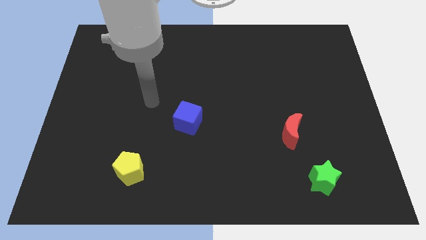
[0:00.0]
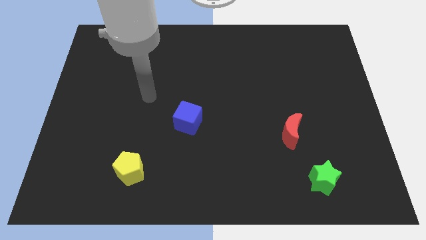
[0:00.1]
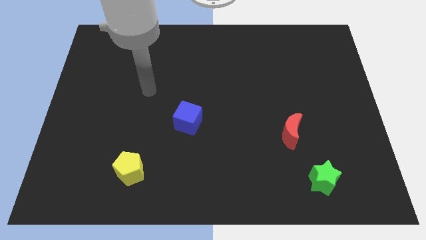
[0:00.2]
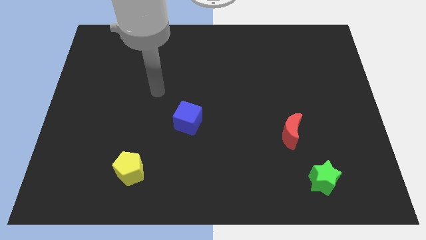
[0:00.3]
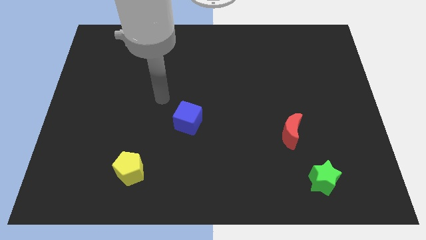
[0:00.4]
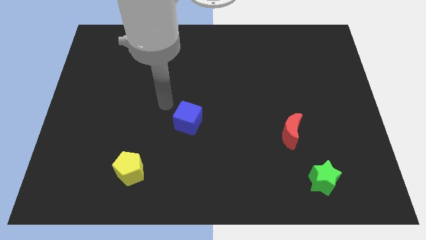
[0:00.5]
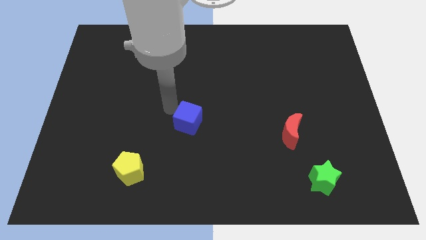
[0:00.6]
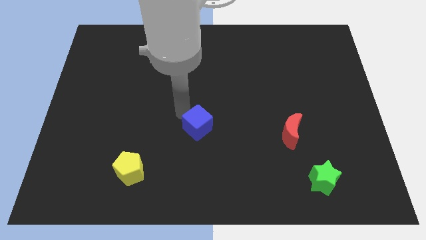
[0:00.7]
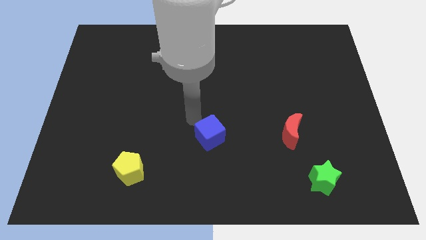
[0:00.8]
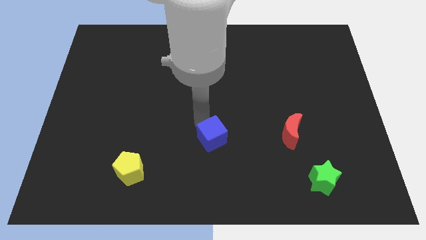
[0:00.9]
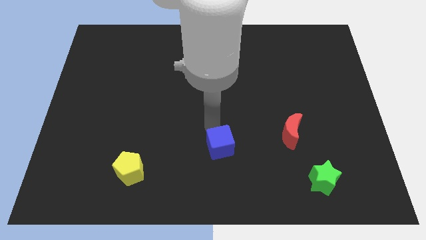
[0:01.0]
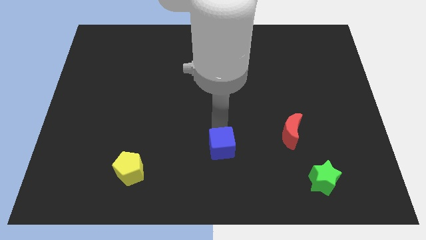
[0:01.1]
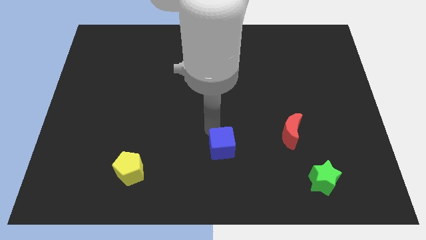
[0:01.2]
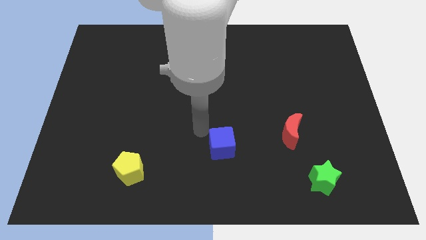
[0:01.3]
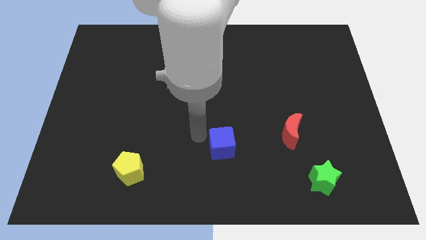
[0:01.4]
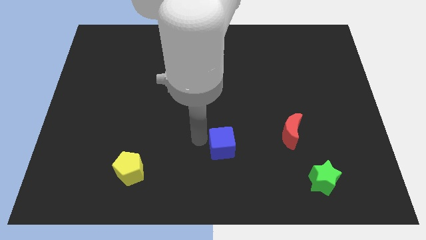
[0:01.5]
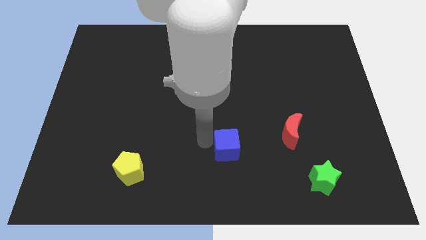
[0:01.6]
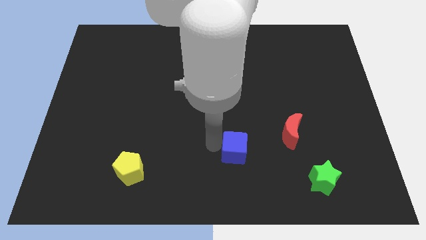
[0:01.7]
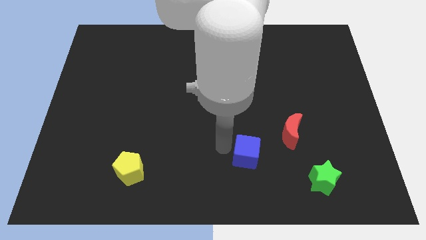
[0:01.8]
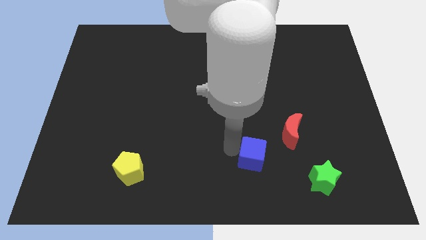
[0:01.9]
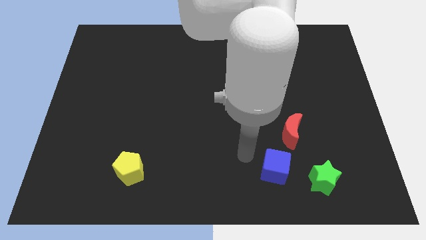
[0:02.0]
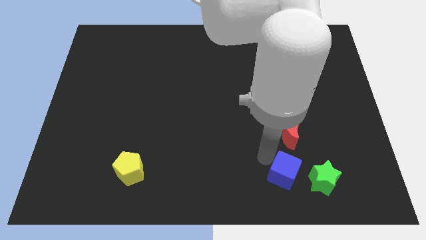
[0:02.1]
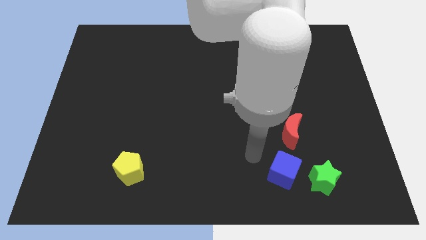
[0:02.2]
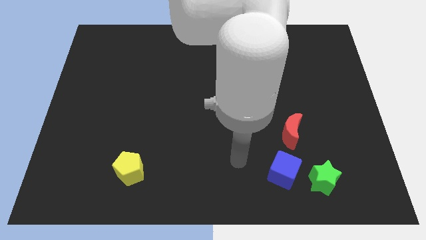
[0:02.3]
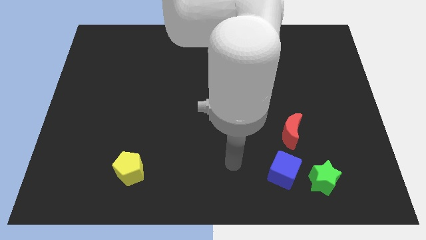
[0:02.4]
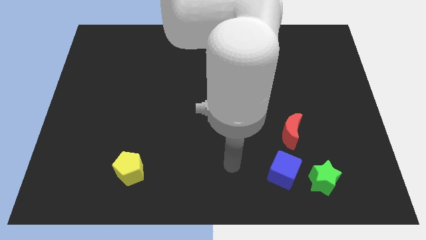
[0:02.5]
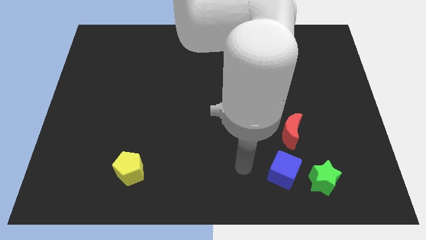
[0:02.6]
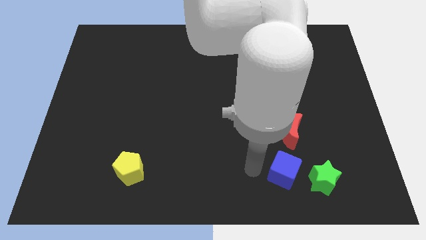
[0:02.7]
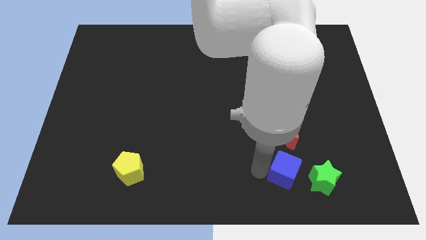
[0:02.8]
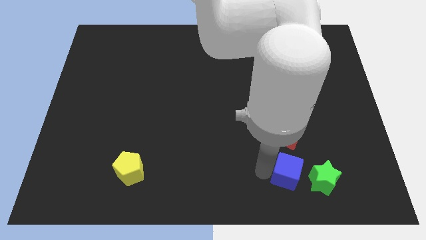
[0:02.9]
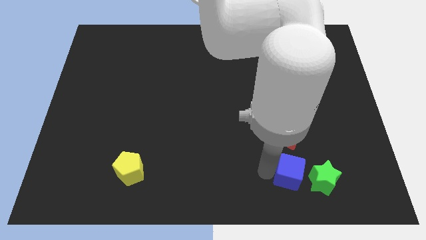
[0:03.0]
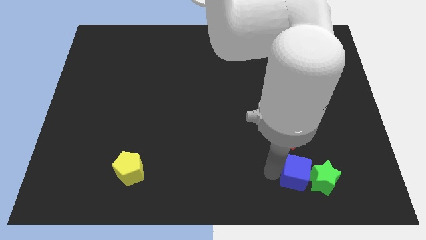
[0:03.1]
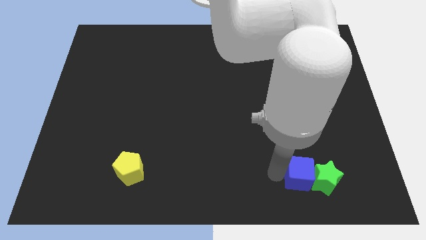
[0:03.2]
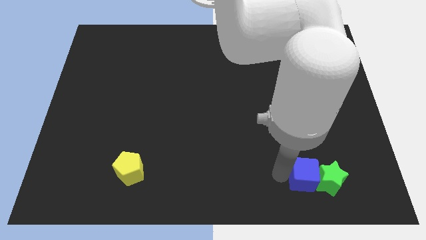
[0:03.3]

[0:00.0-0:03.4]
put the blue block to the green block

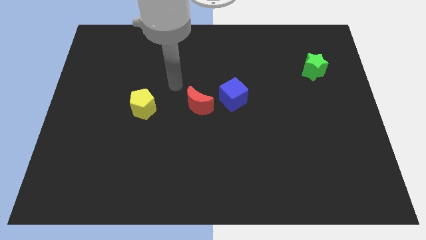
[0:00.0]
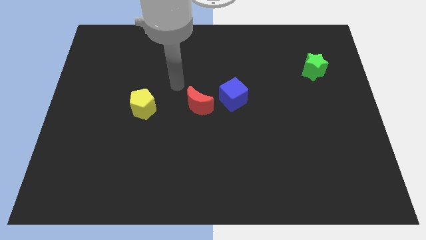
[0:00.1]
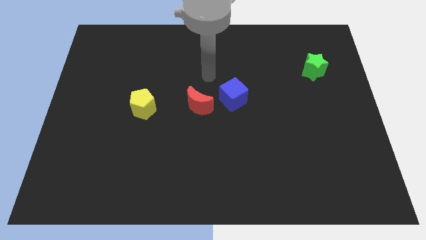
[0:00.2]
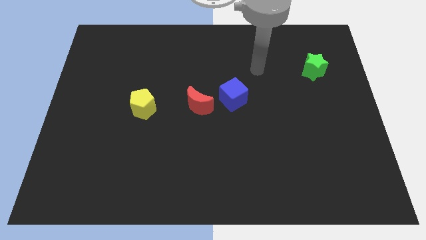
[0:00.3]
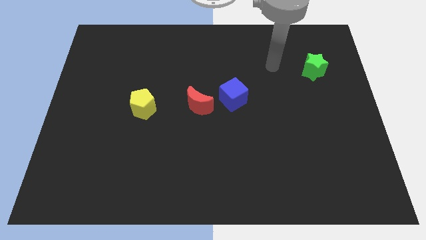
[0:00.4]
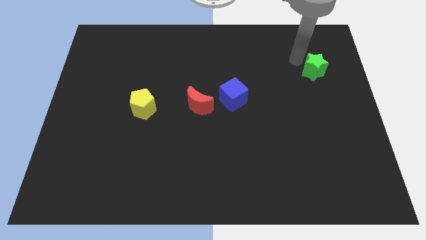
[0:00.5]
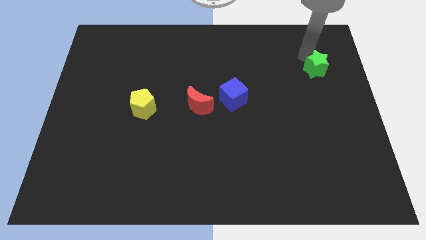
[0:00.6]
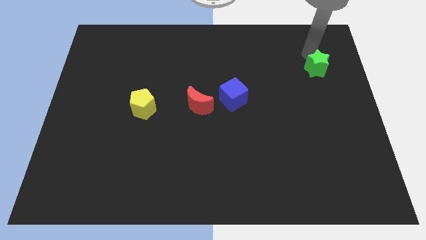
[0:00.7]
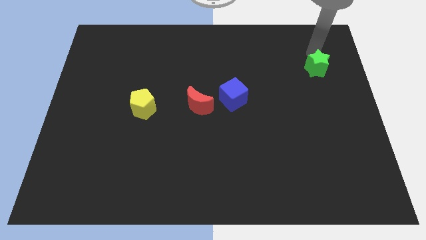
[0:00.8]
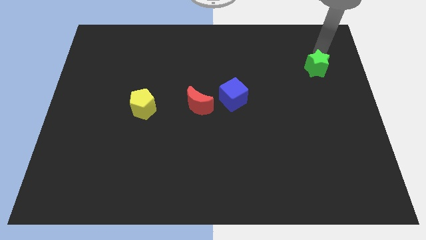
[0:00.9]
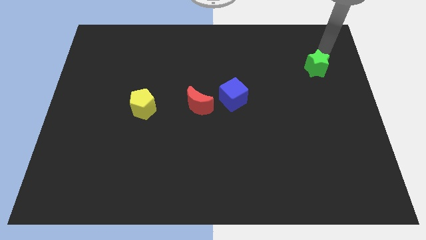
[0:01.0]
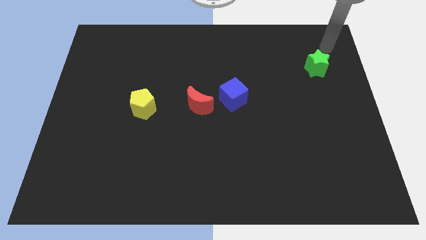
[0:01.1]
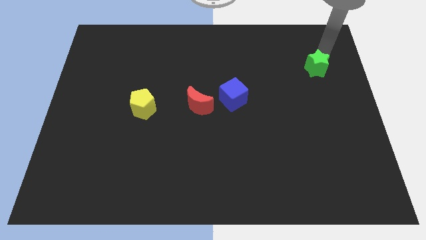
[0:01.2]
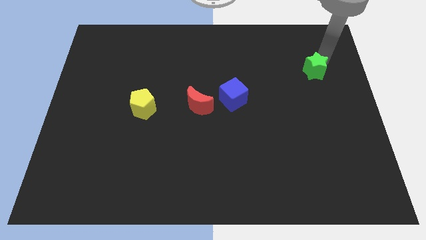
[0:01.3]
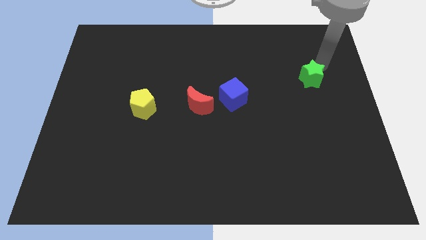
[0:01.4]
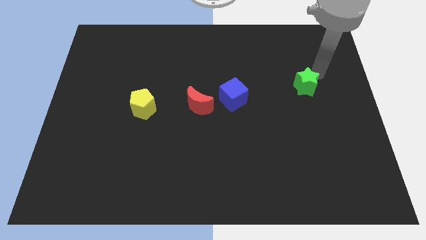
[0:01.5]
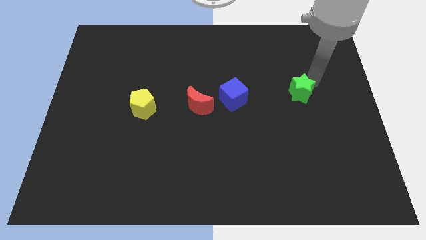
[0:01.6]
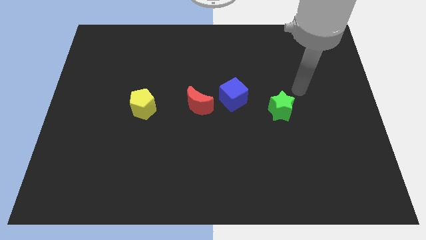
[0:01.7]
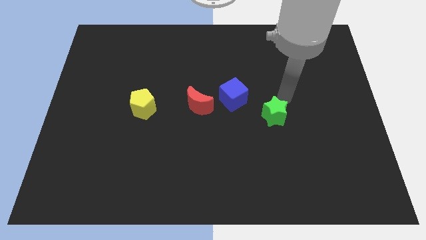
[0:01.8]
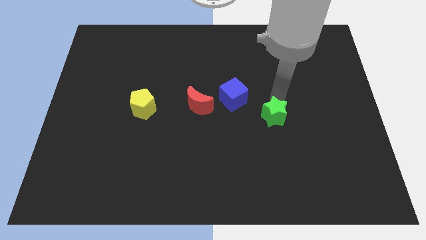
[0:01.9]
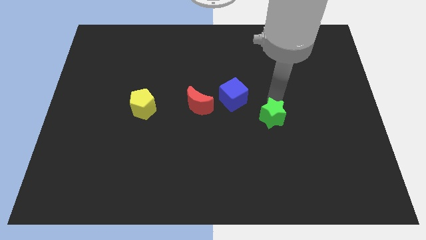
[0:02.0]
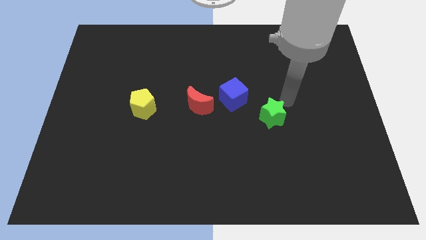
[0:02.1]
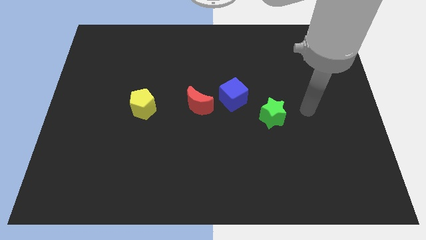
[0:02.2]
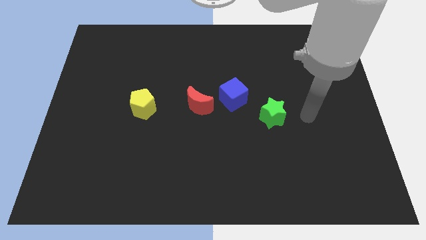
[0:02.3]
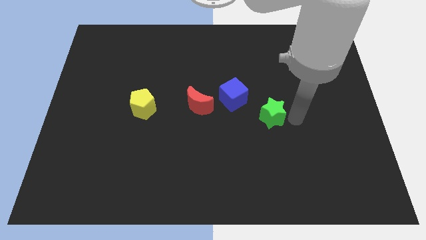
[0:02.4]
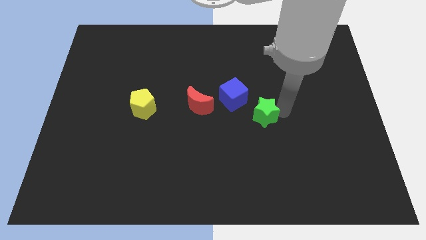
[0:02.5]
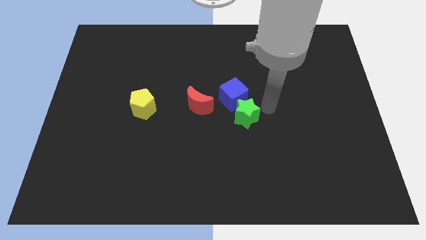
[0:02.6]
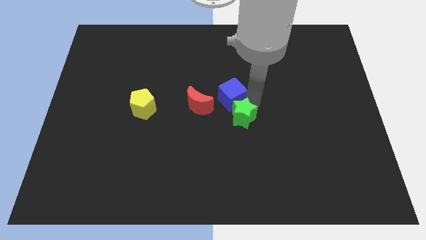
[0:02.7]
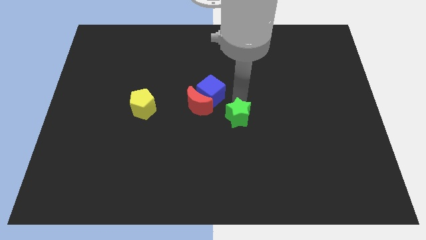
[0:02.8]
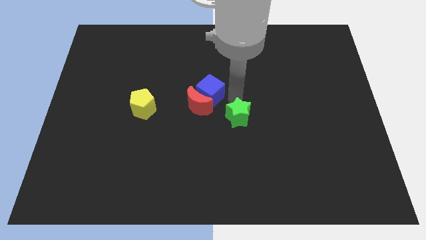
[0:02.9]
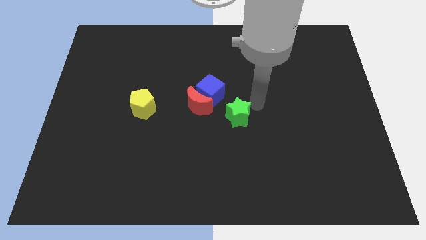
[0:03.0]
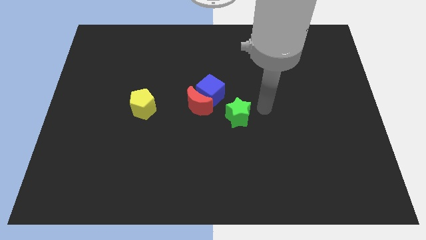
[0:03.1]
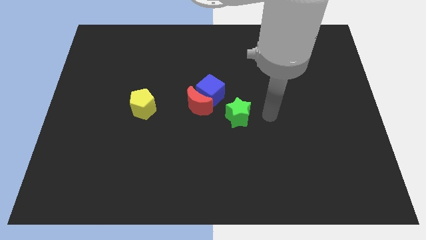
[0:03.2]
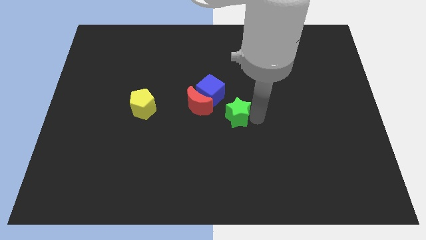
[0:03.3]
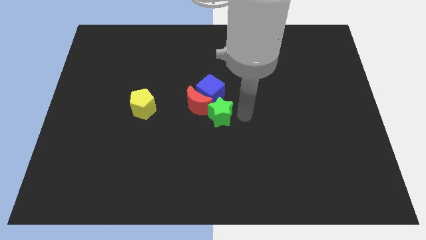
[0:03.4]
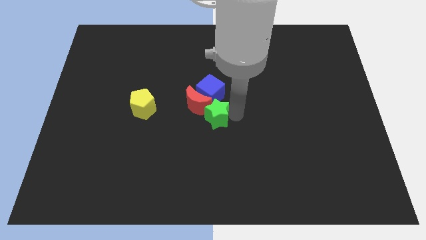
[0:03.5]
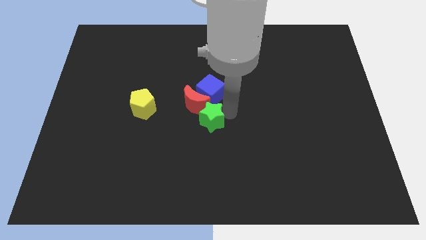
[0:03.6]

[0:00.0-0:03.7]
push the green block next to the red block

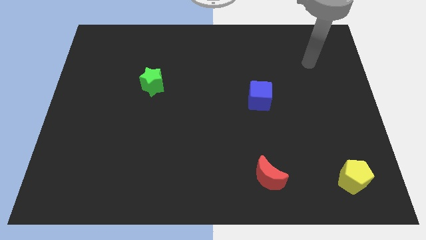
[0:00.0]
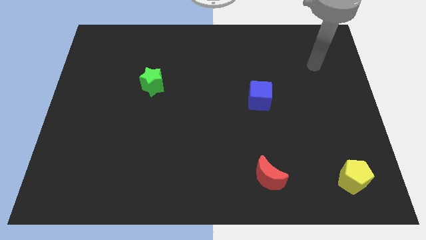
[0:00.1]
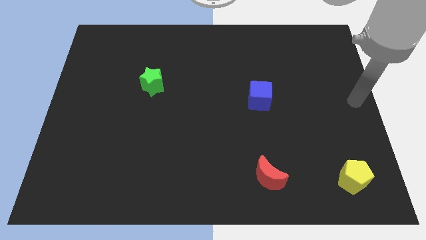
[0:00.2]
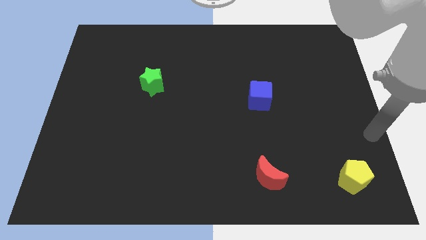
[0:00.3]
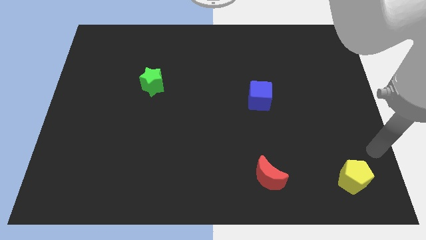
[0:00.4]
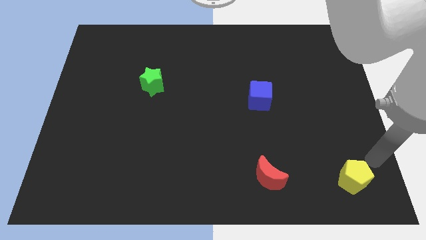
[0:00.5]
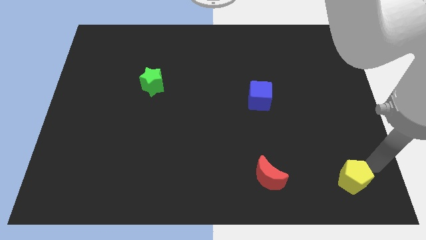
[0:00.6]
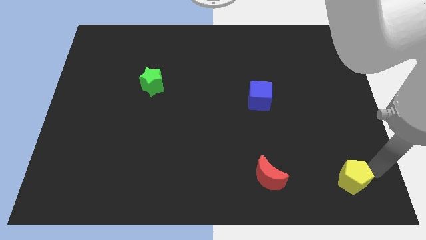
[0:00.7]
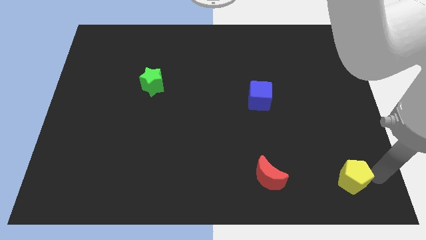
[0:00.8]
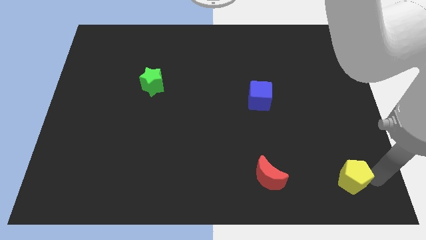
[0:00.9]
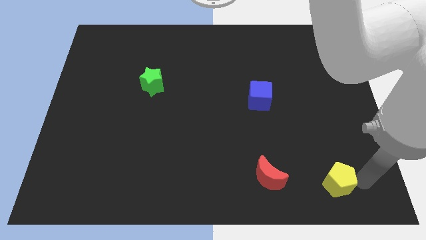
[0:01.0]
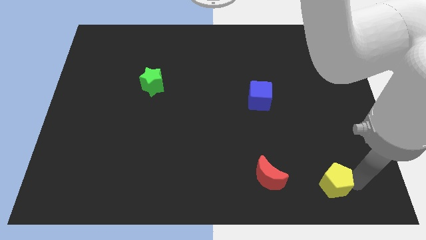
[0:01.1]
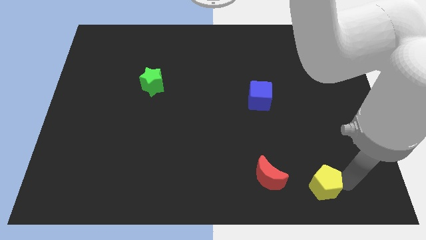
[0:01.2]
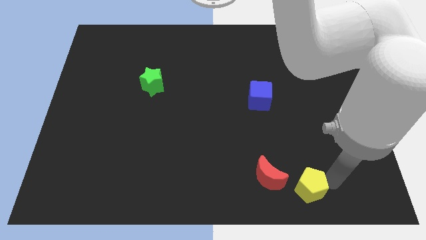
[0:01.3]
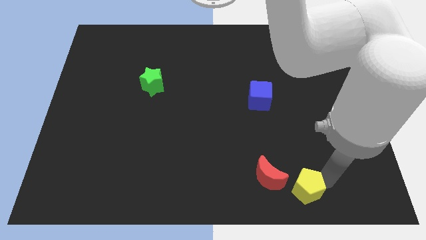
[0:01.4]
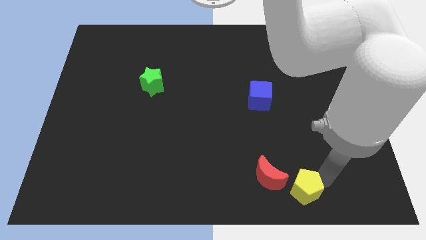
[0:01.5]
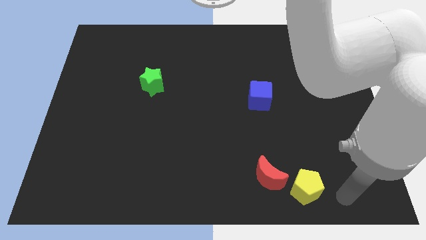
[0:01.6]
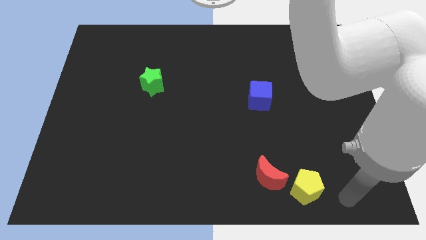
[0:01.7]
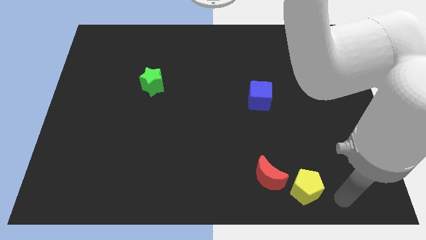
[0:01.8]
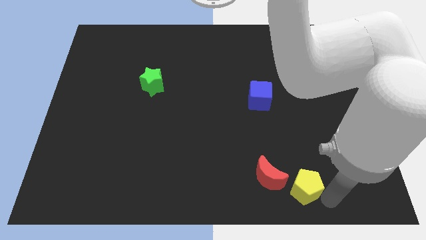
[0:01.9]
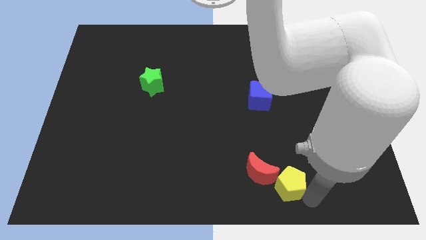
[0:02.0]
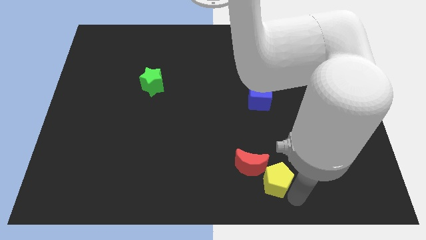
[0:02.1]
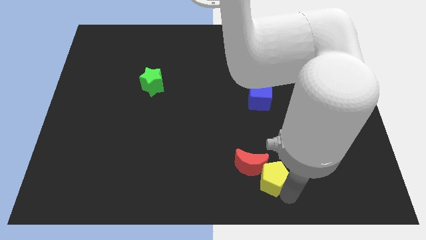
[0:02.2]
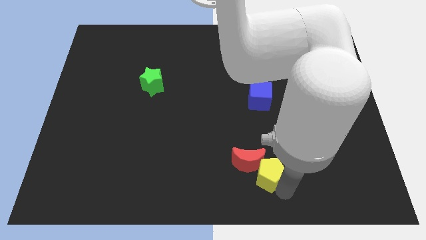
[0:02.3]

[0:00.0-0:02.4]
slide the yellow pentagon to the red moon
